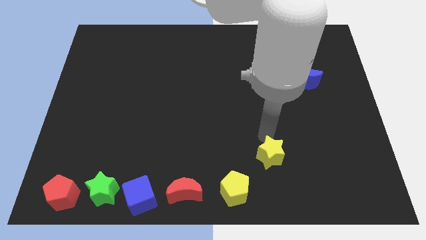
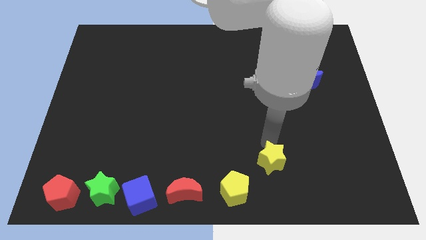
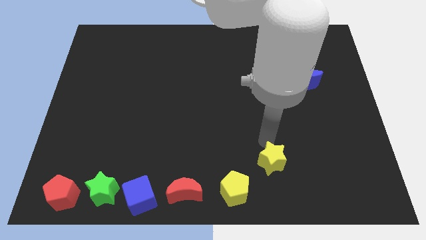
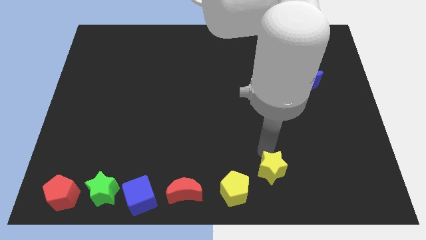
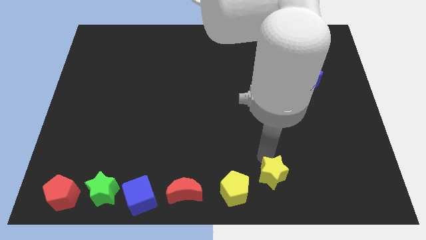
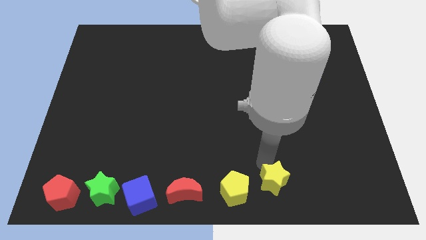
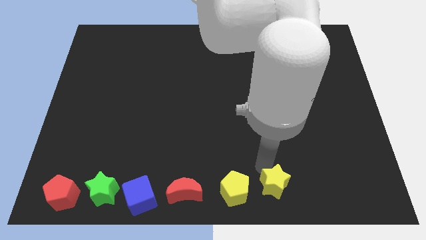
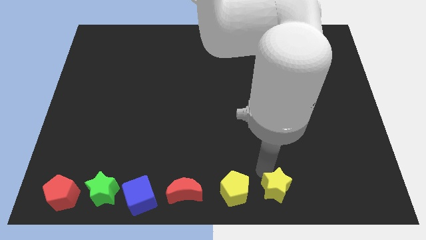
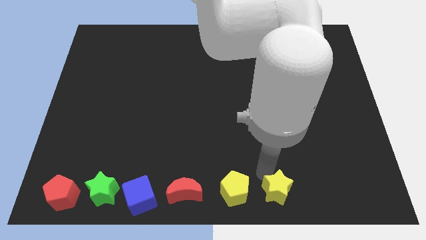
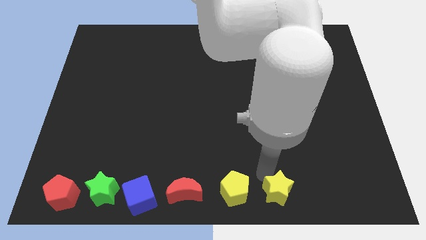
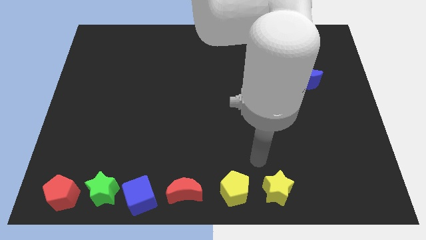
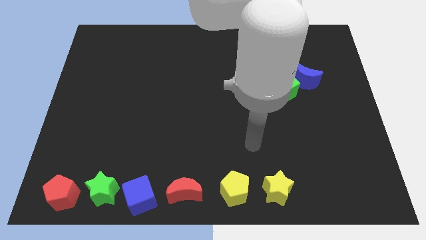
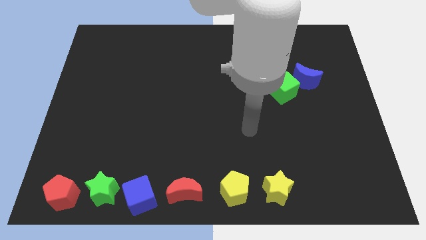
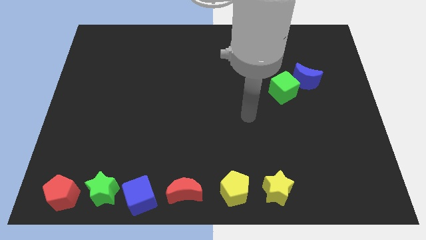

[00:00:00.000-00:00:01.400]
place the yellow star to the right of the yellow pentagon

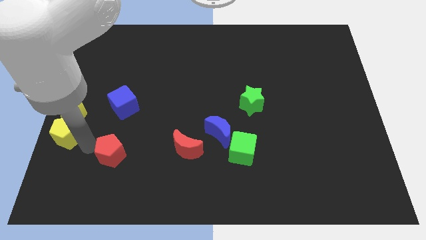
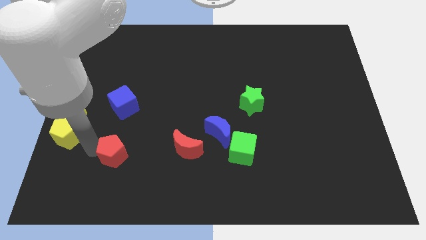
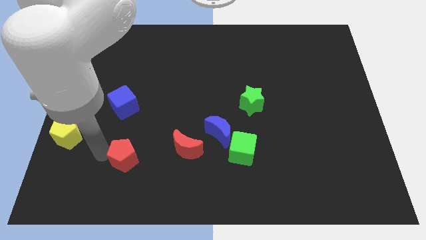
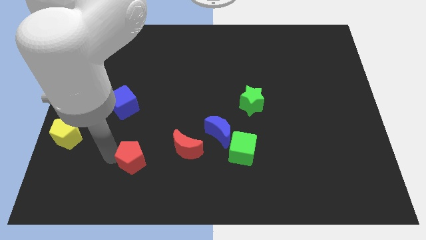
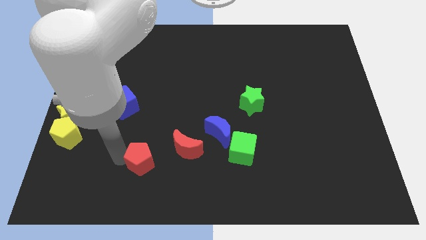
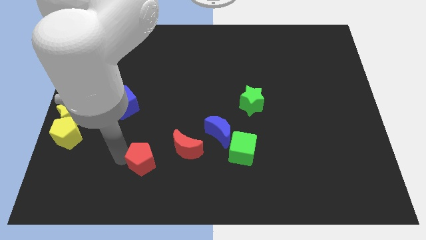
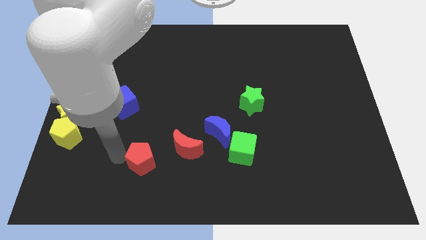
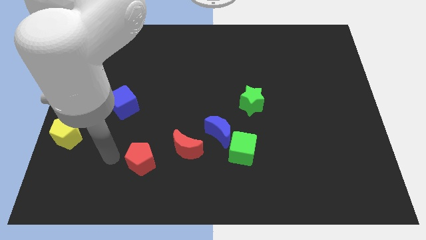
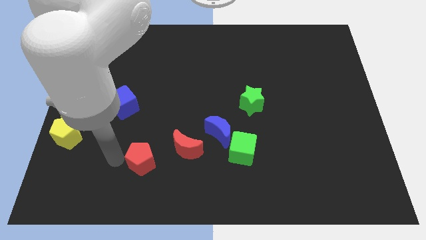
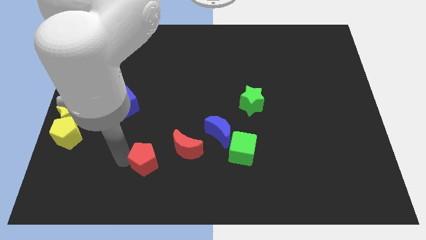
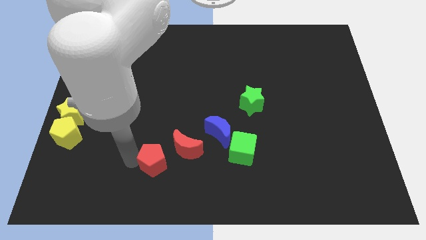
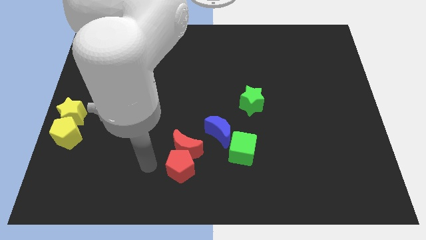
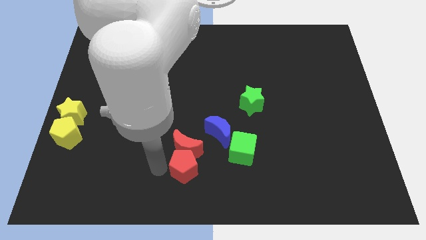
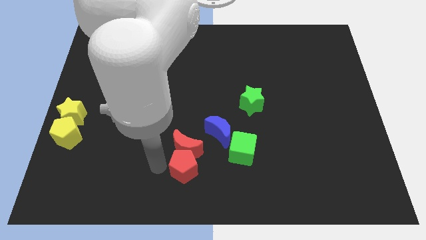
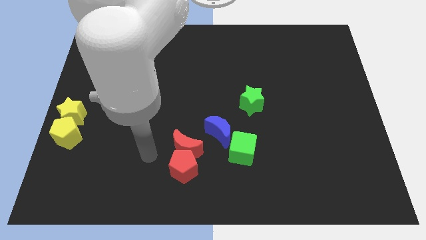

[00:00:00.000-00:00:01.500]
put the red pentagon at the bottom of red crescent

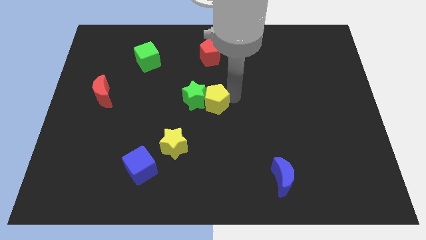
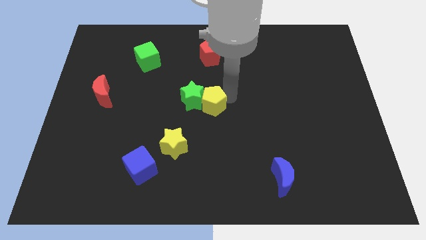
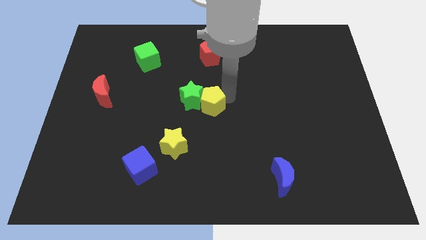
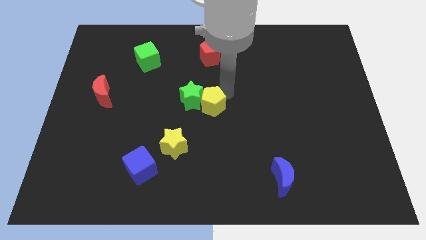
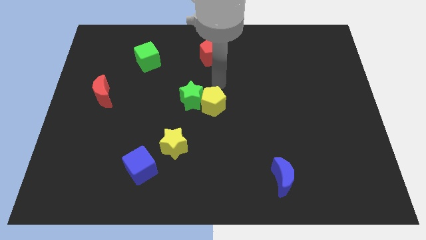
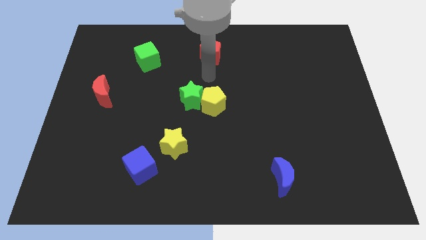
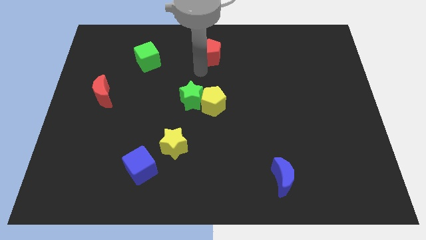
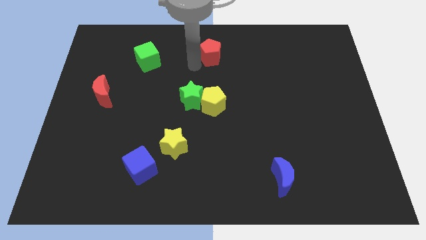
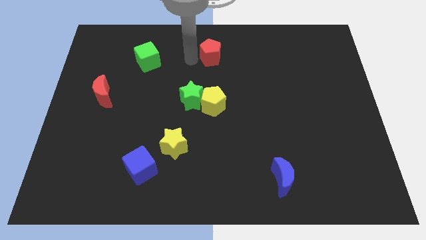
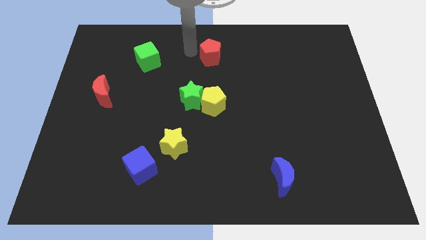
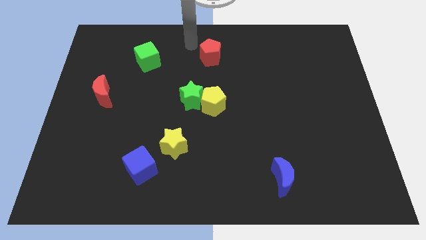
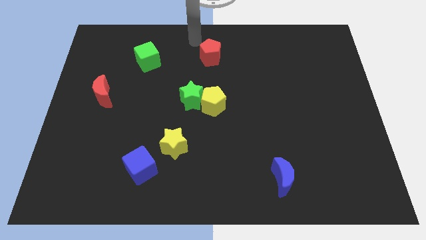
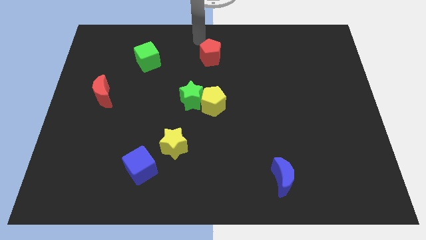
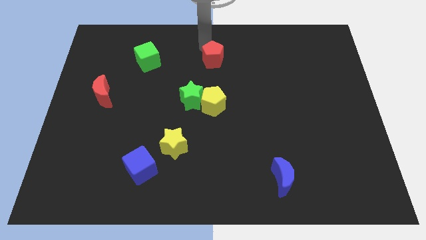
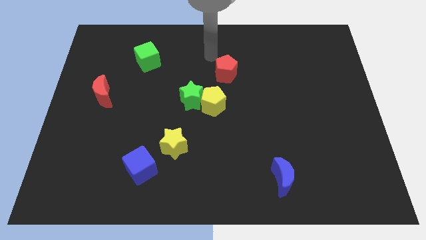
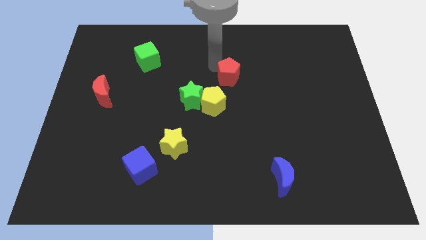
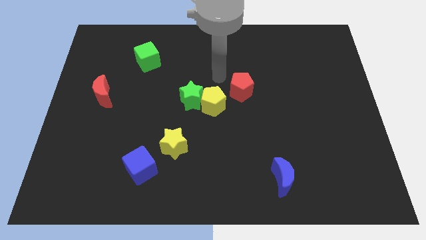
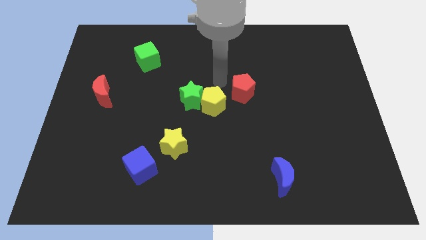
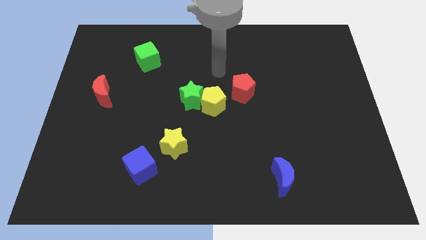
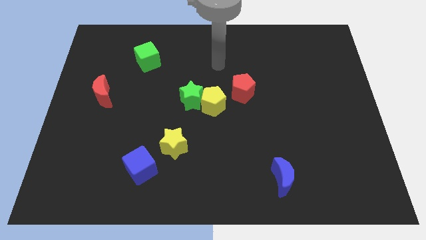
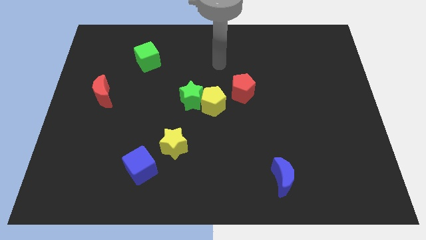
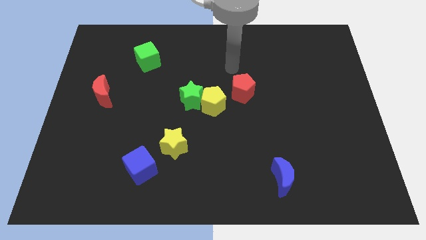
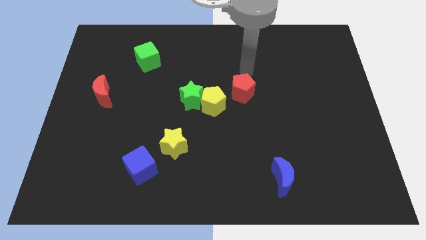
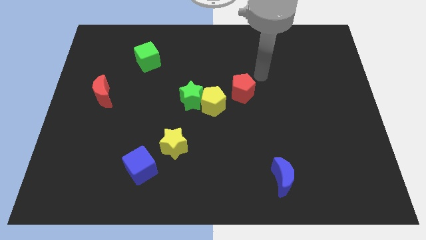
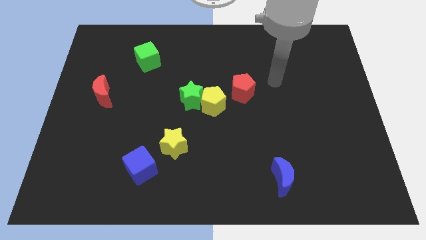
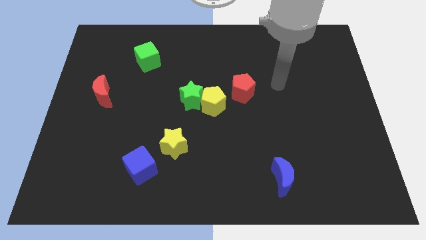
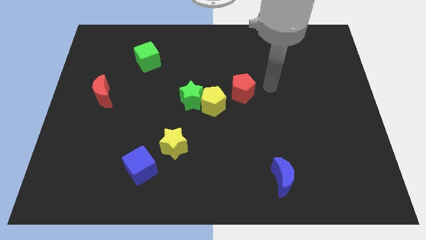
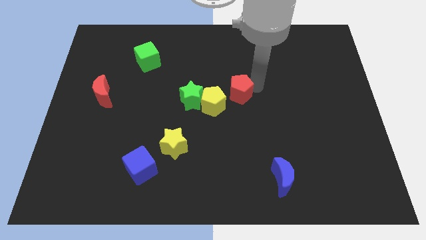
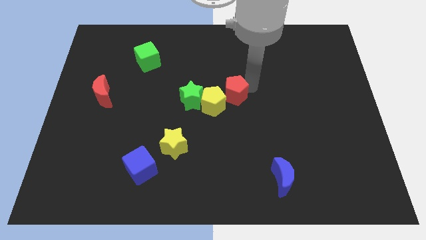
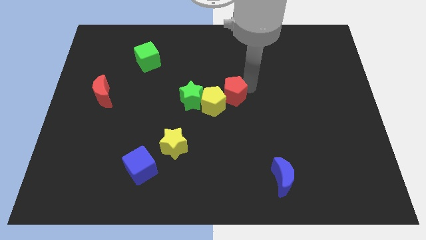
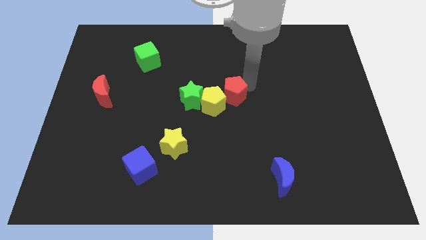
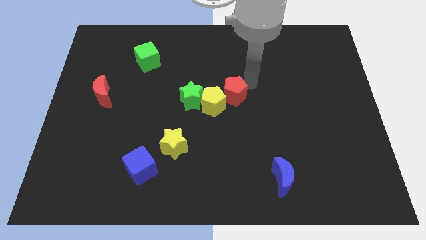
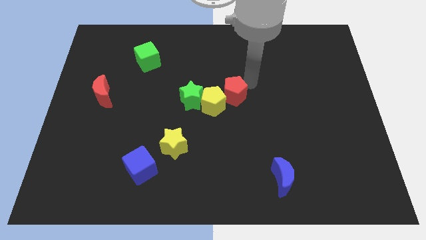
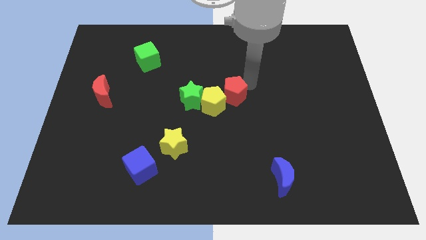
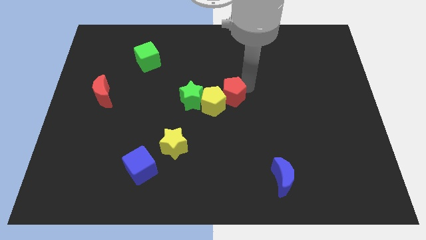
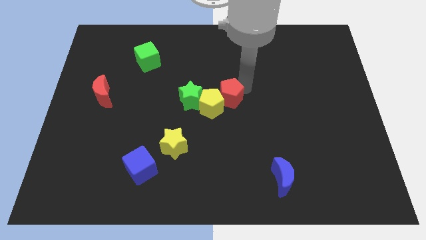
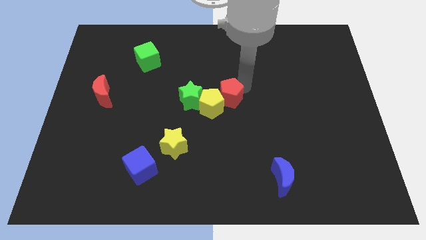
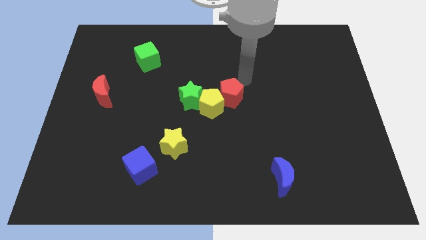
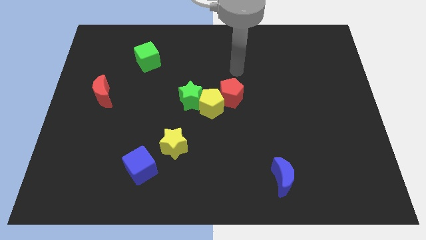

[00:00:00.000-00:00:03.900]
move the red pentagon towards the top right of the yellow pentagon

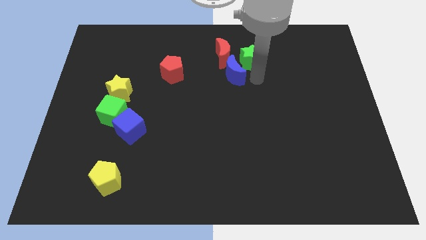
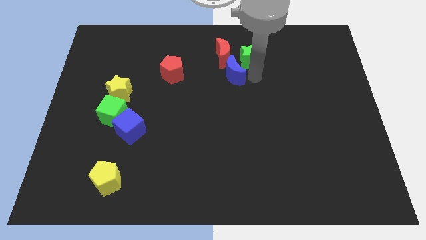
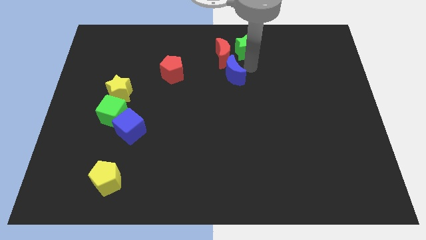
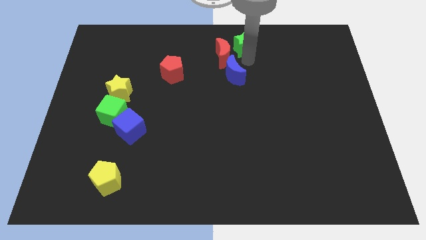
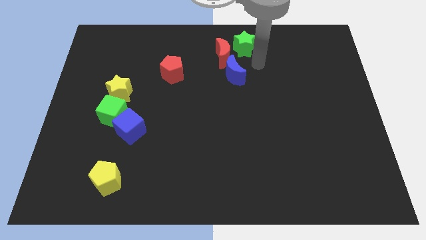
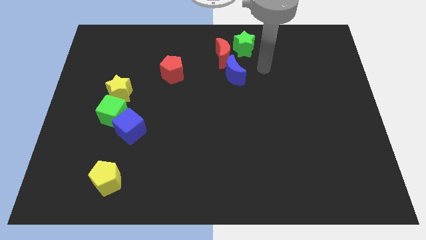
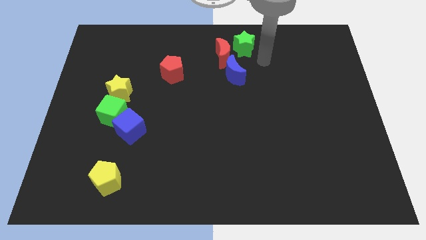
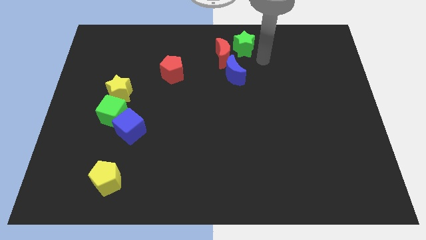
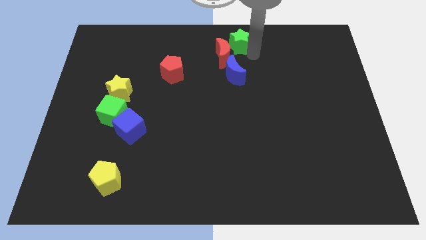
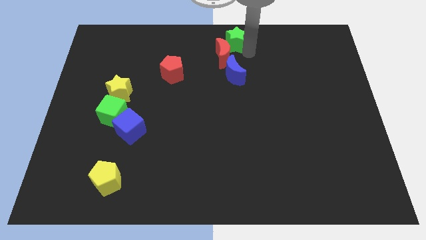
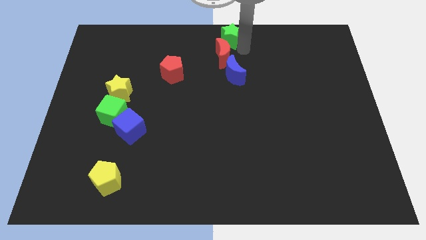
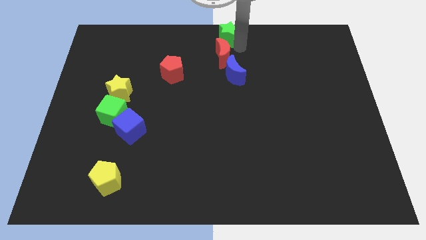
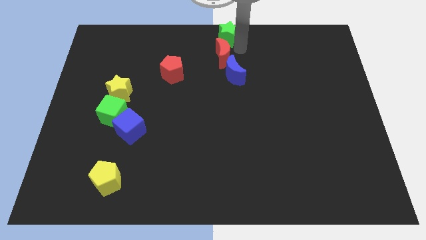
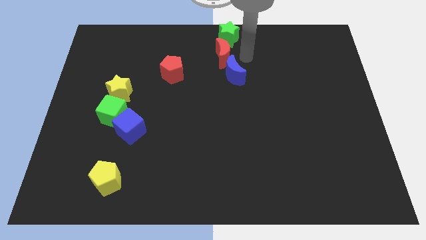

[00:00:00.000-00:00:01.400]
push the green star to the top of the red crescent

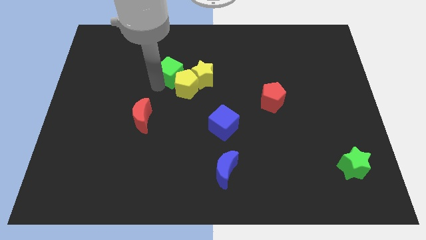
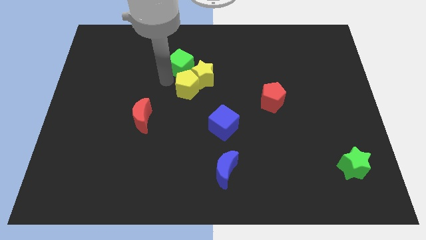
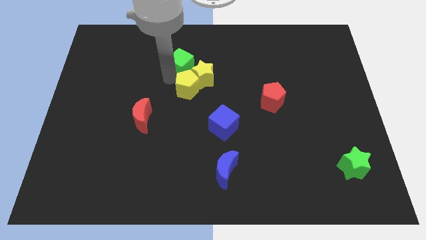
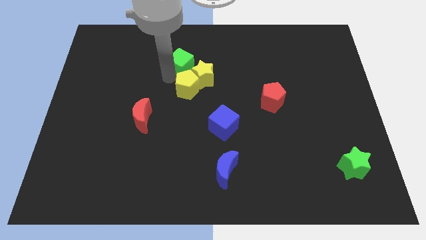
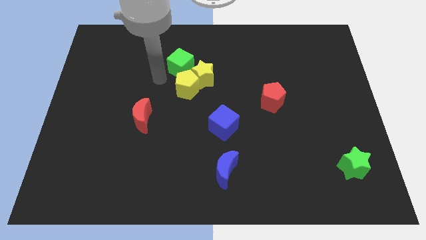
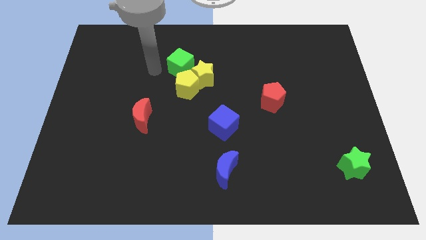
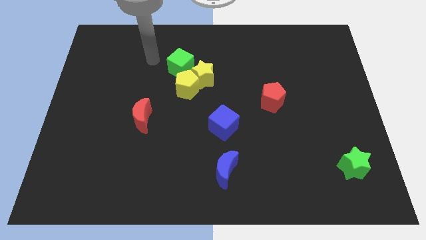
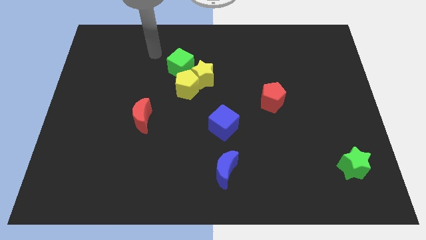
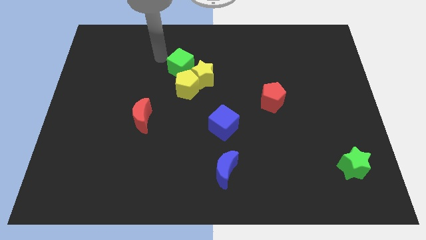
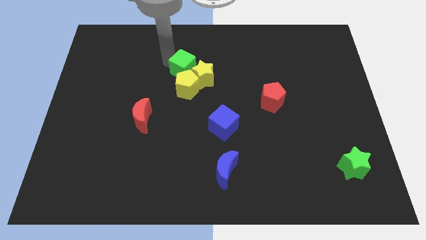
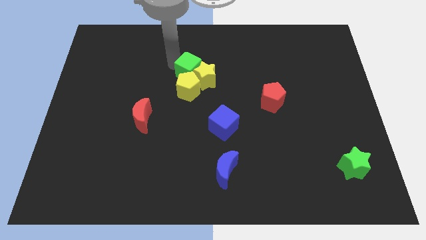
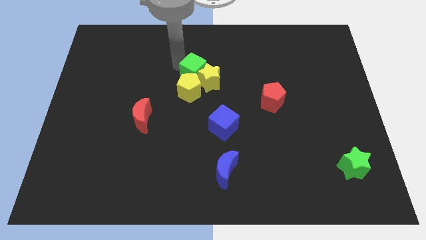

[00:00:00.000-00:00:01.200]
slide the green cube into the yellow star
